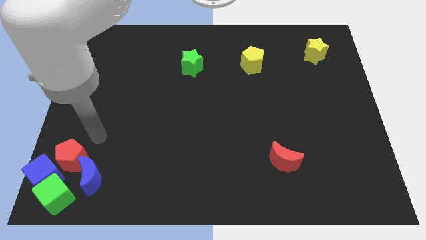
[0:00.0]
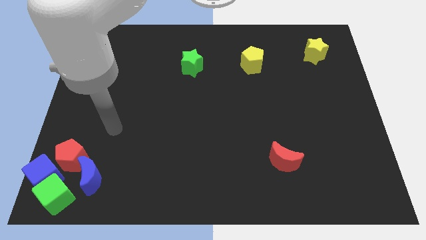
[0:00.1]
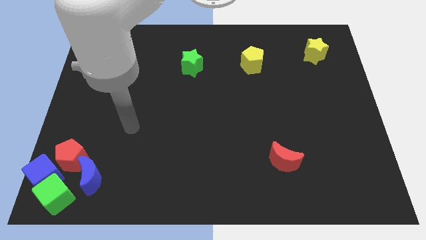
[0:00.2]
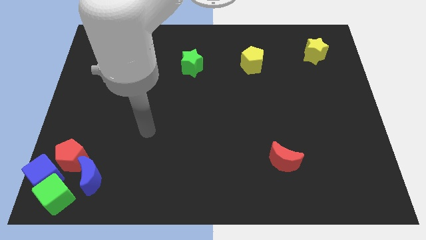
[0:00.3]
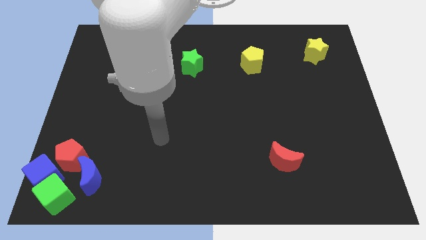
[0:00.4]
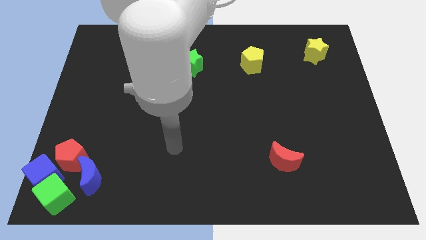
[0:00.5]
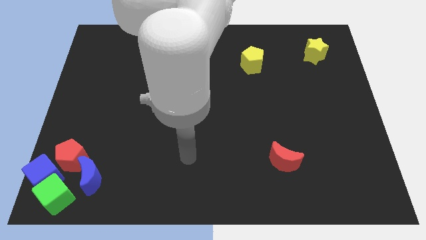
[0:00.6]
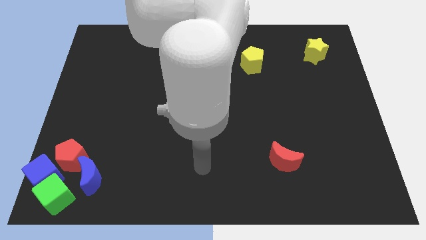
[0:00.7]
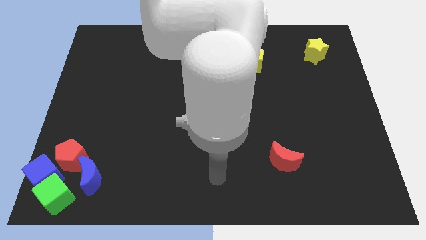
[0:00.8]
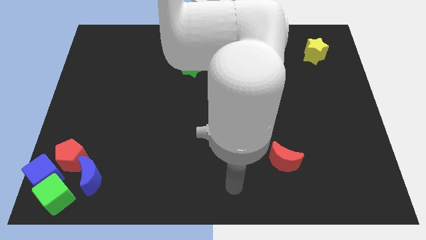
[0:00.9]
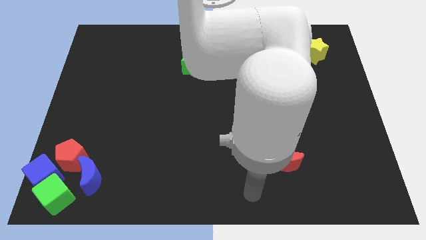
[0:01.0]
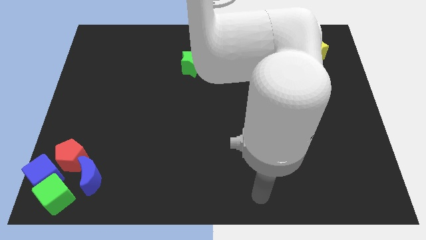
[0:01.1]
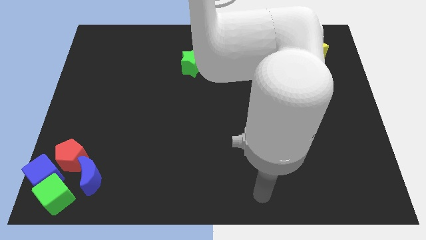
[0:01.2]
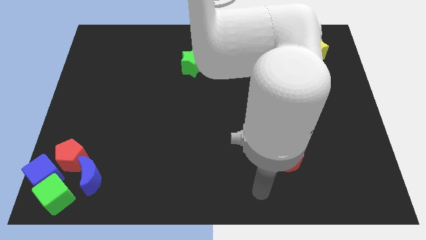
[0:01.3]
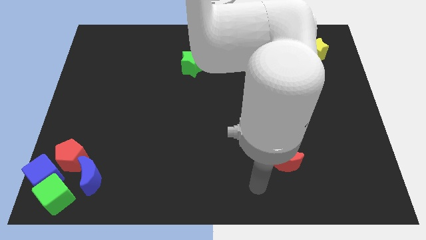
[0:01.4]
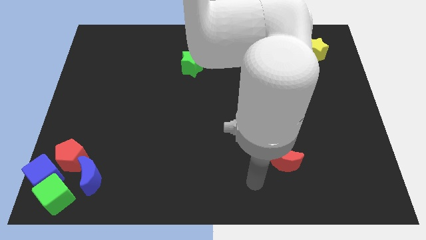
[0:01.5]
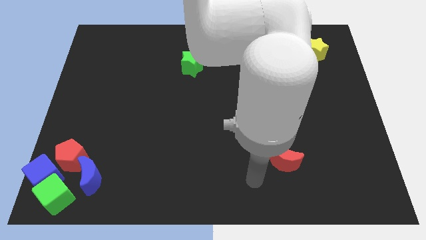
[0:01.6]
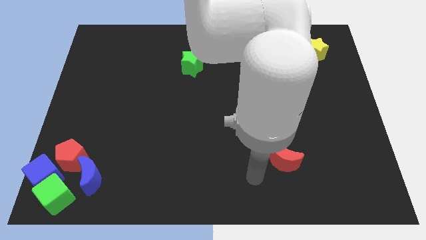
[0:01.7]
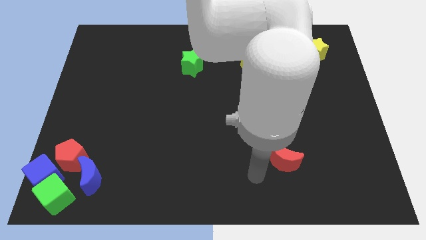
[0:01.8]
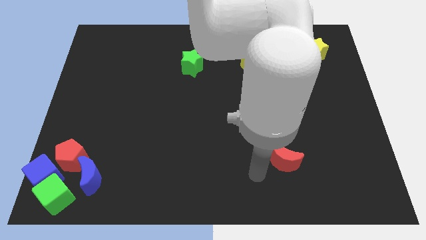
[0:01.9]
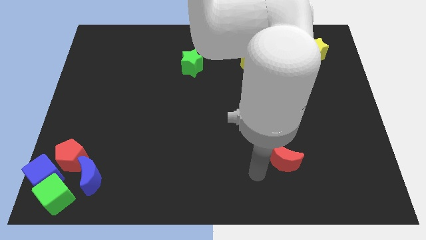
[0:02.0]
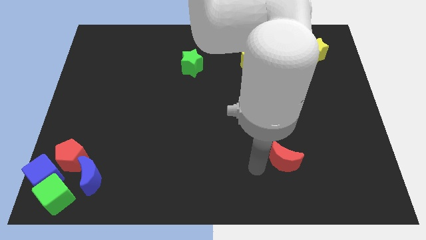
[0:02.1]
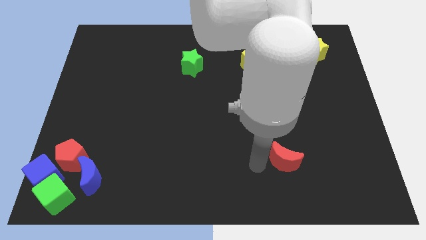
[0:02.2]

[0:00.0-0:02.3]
point your arm at the left of the red crescent

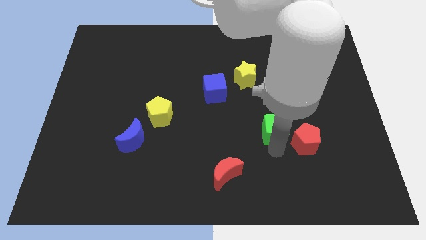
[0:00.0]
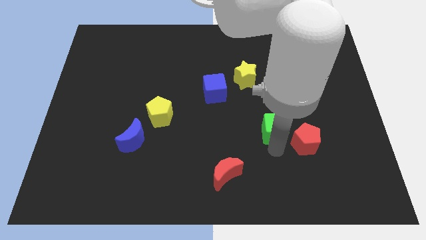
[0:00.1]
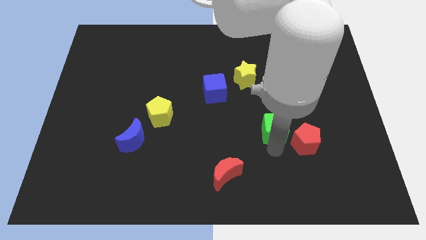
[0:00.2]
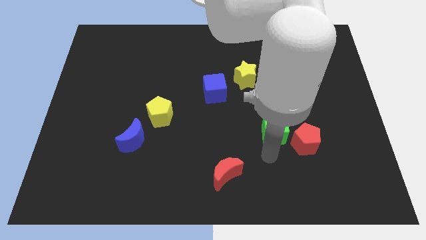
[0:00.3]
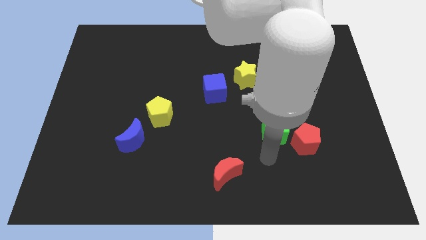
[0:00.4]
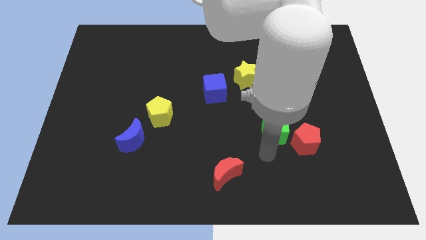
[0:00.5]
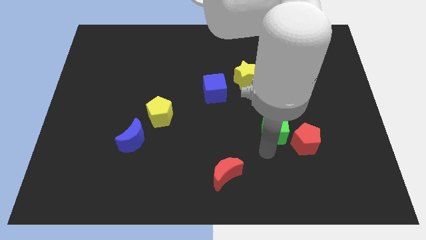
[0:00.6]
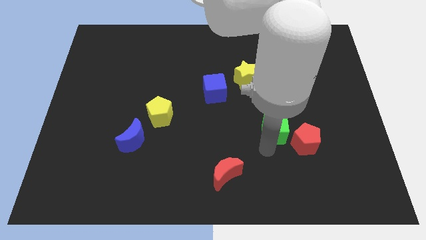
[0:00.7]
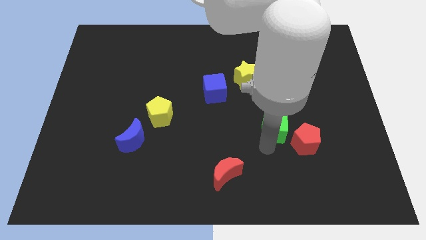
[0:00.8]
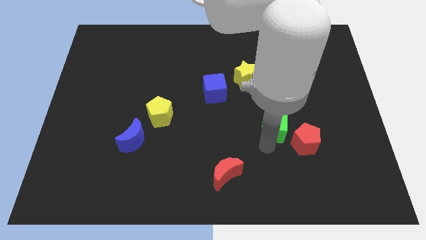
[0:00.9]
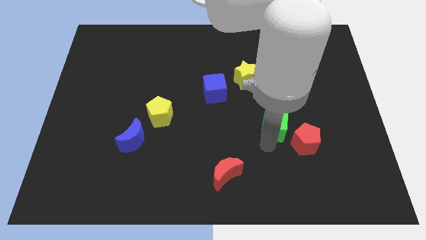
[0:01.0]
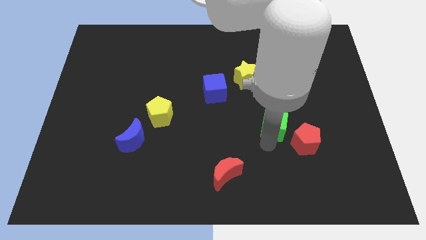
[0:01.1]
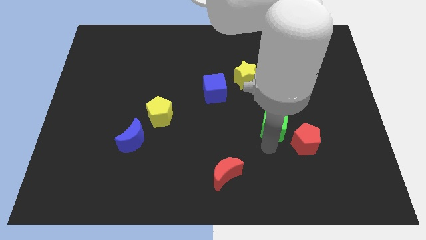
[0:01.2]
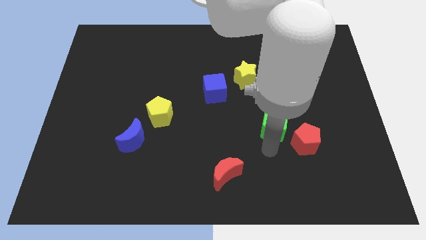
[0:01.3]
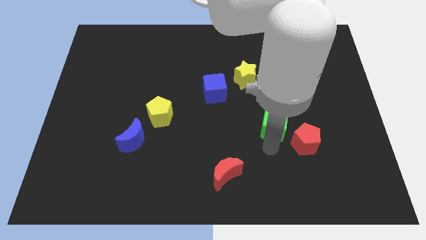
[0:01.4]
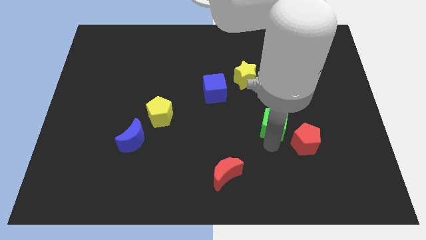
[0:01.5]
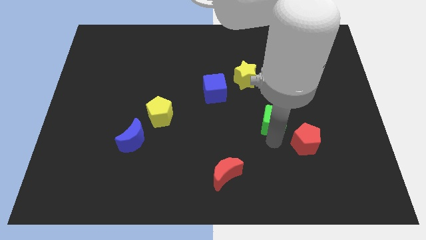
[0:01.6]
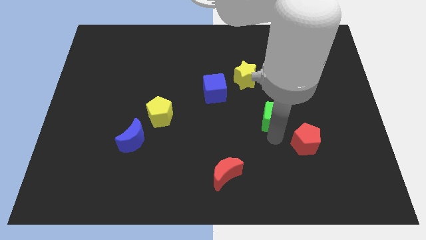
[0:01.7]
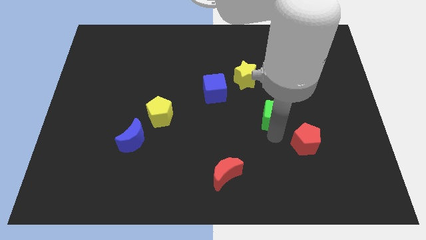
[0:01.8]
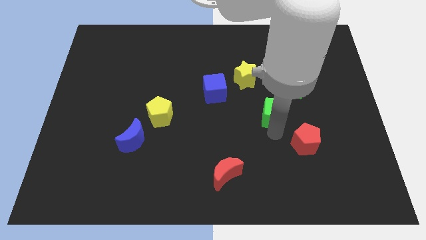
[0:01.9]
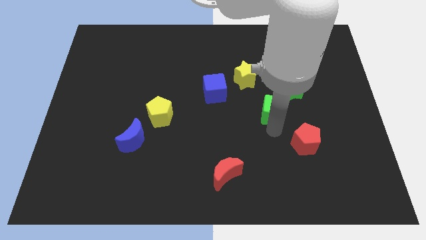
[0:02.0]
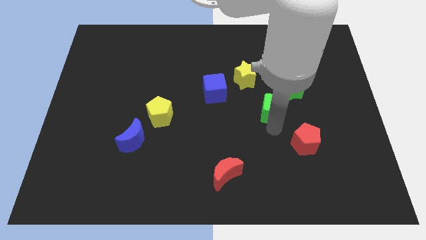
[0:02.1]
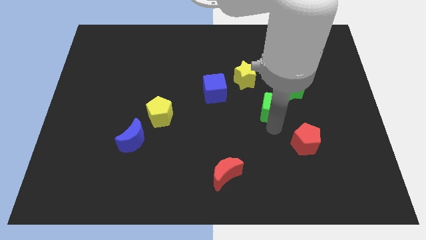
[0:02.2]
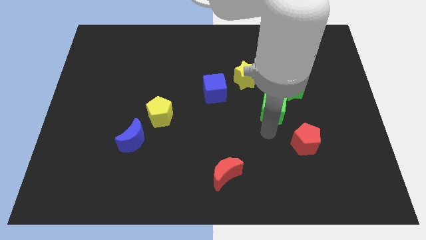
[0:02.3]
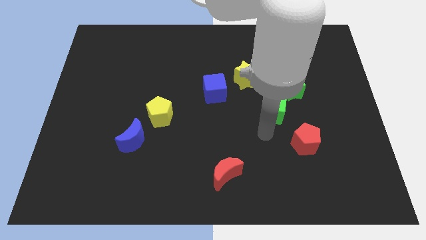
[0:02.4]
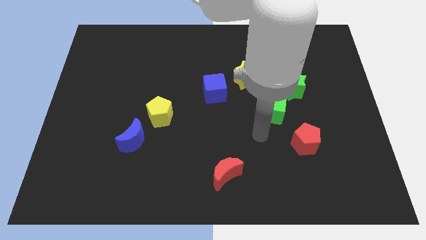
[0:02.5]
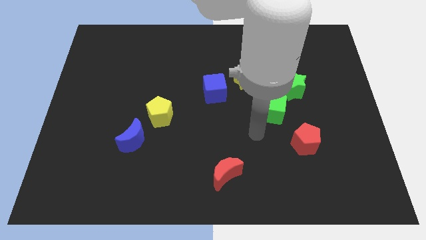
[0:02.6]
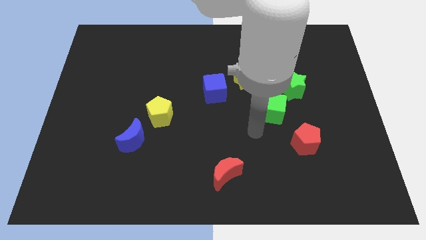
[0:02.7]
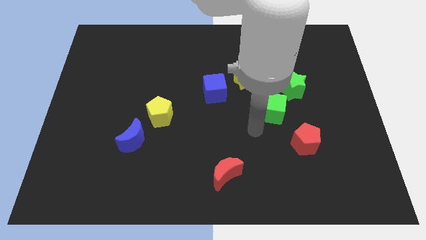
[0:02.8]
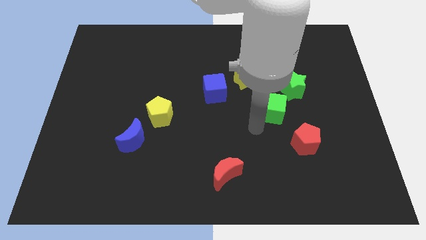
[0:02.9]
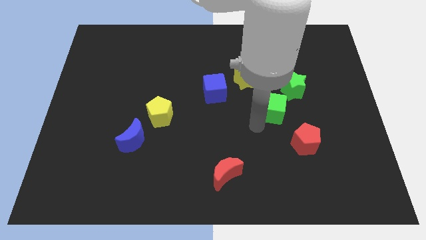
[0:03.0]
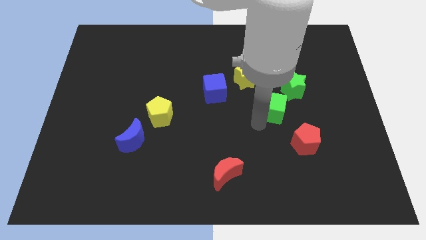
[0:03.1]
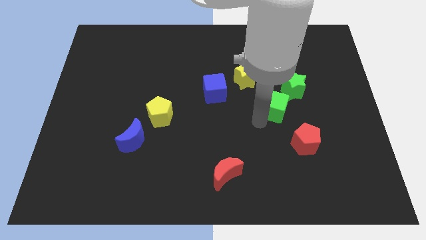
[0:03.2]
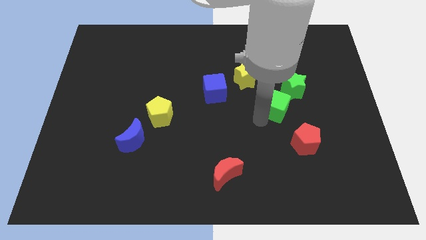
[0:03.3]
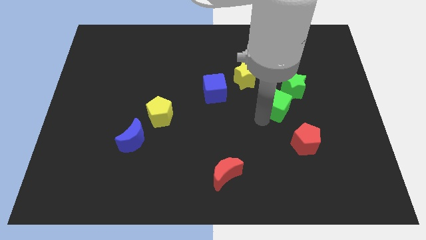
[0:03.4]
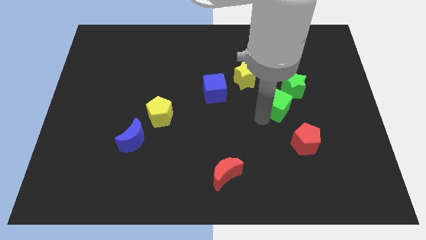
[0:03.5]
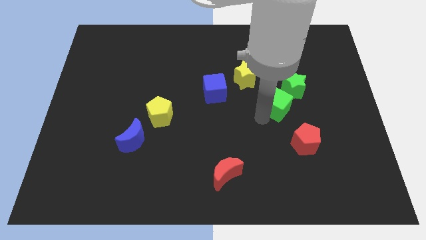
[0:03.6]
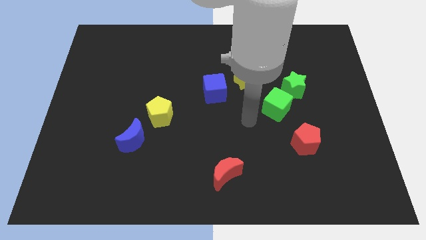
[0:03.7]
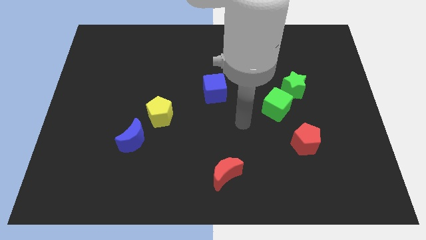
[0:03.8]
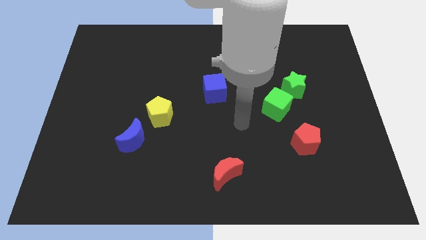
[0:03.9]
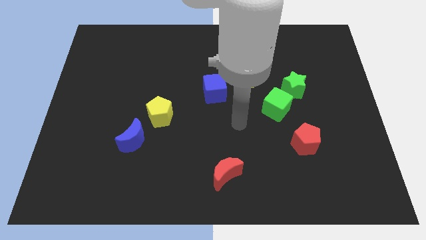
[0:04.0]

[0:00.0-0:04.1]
slide green cube towards green star

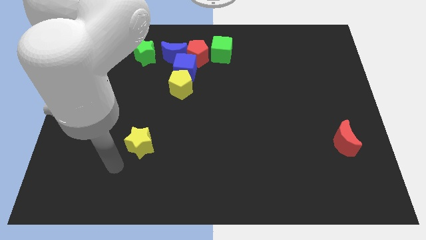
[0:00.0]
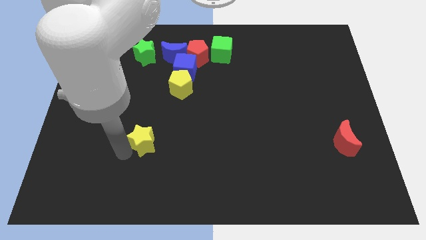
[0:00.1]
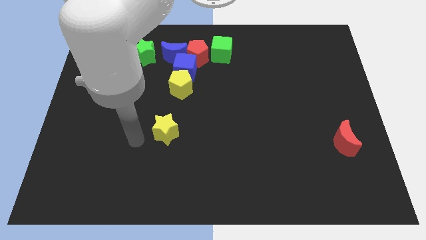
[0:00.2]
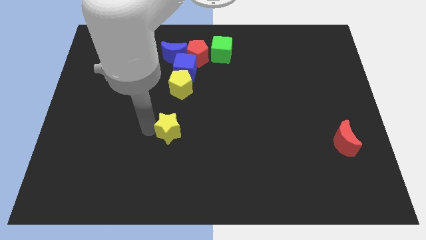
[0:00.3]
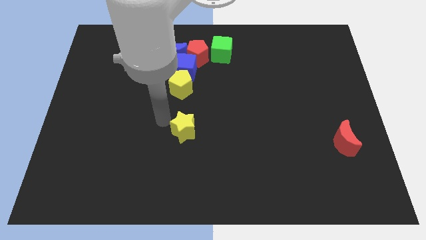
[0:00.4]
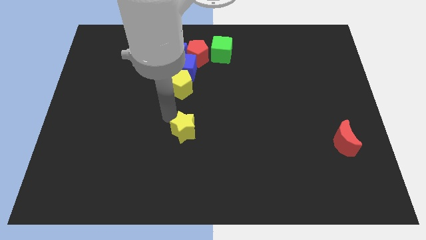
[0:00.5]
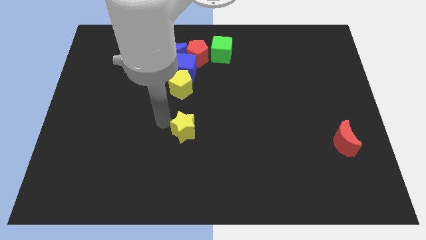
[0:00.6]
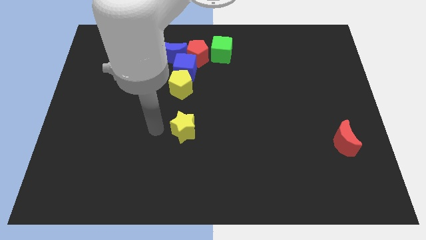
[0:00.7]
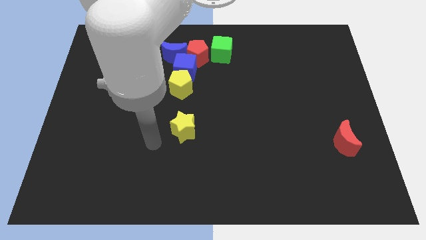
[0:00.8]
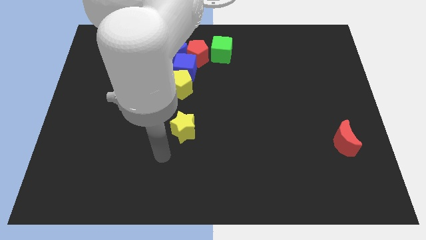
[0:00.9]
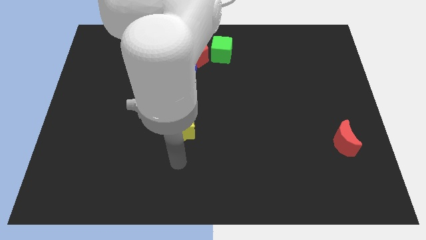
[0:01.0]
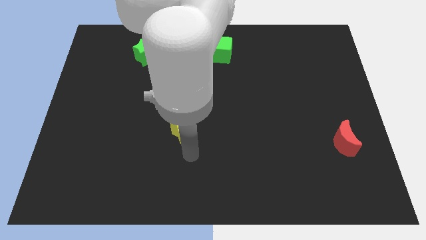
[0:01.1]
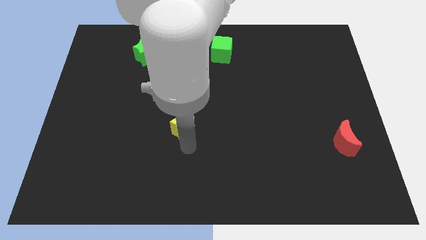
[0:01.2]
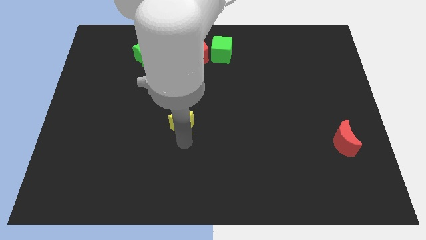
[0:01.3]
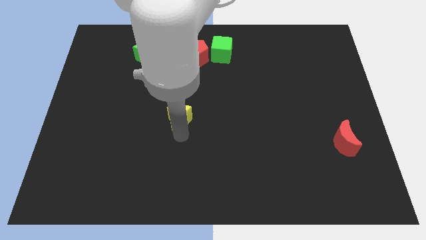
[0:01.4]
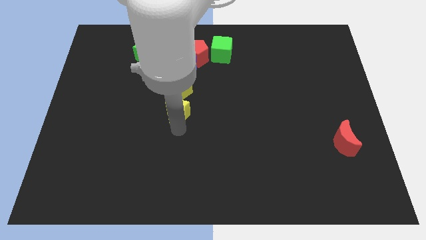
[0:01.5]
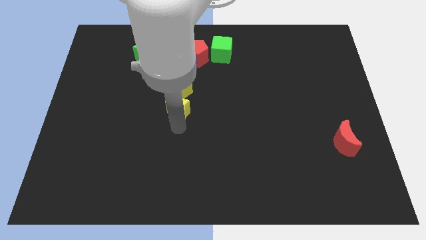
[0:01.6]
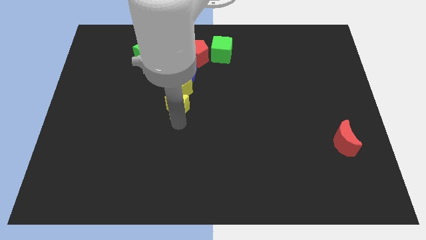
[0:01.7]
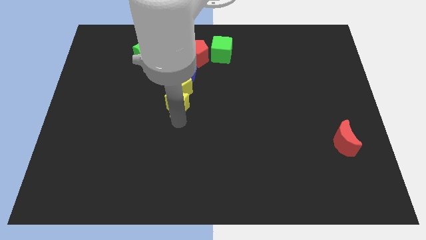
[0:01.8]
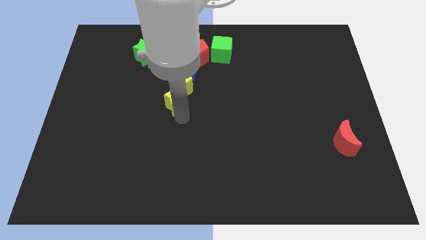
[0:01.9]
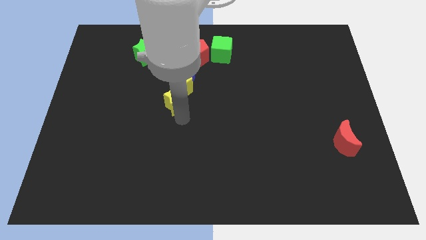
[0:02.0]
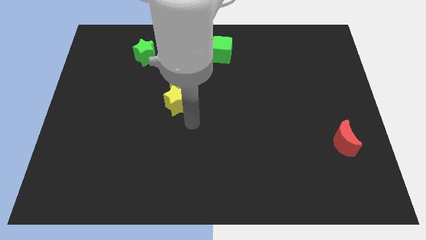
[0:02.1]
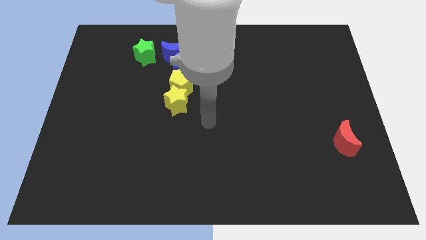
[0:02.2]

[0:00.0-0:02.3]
move the yellow star into the yellow pentagon

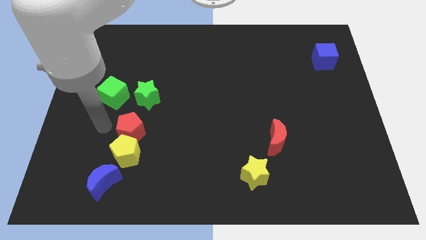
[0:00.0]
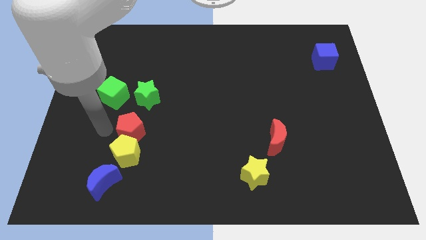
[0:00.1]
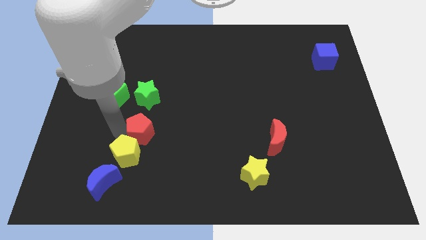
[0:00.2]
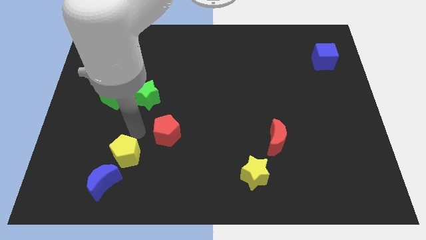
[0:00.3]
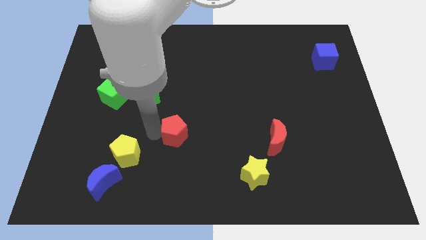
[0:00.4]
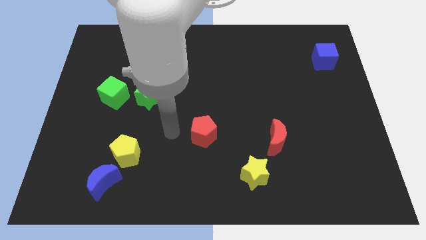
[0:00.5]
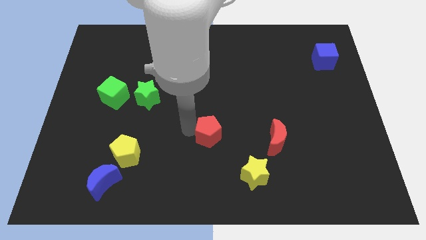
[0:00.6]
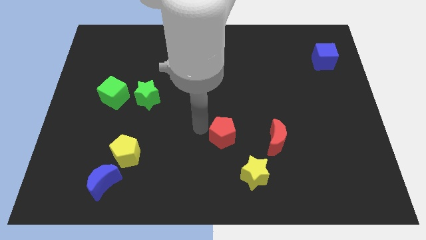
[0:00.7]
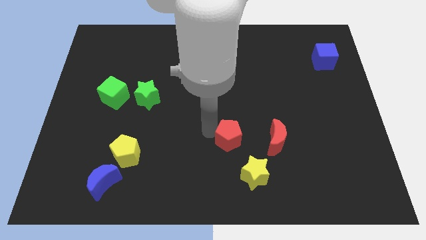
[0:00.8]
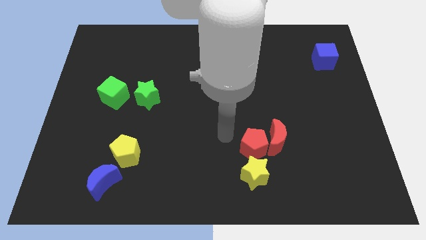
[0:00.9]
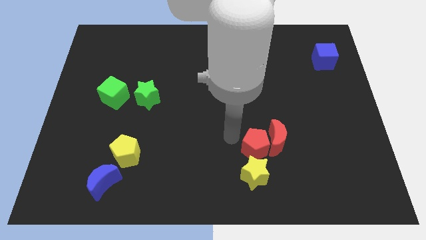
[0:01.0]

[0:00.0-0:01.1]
move the red pentagon at the top of the yellow star
